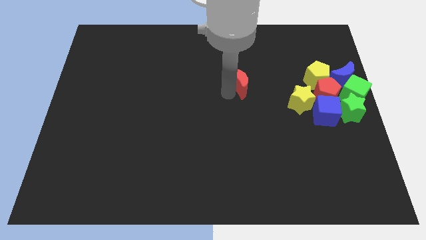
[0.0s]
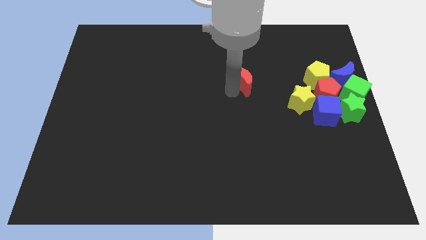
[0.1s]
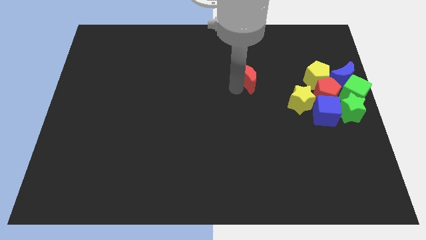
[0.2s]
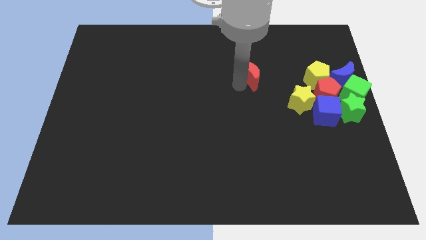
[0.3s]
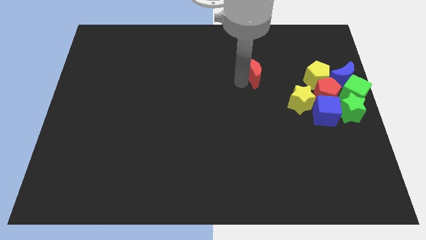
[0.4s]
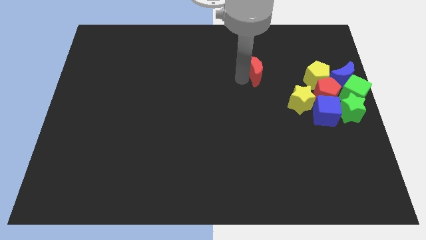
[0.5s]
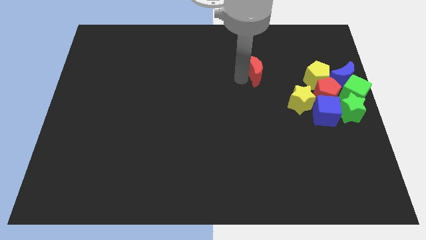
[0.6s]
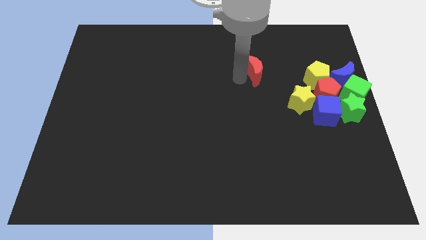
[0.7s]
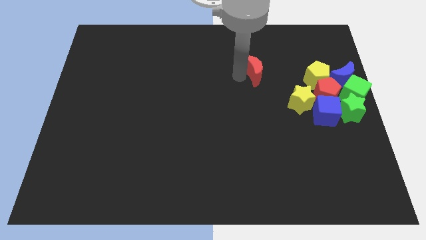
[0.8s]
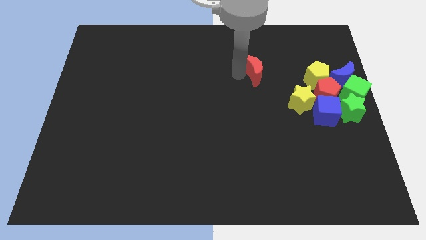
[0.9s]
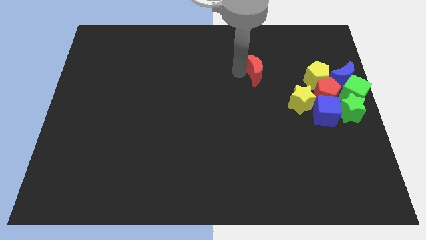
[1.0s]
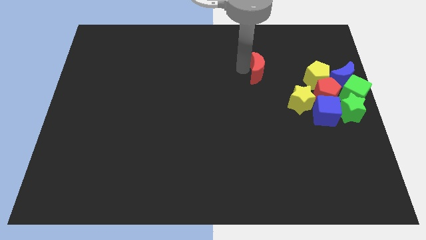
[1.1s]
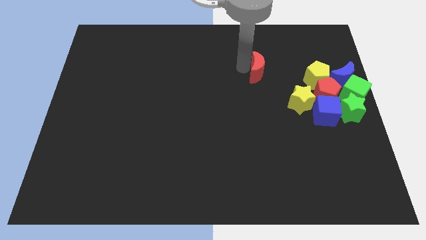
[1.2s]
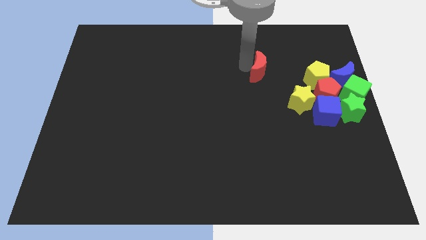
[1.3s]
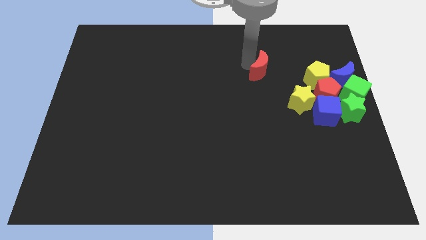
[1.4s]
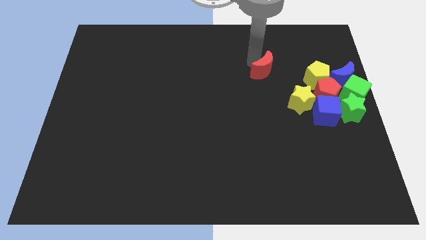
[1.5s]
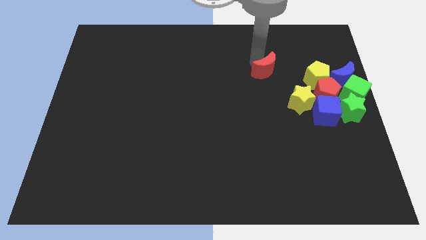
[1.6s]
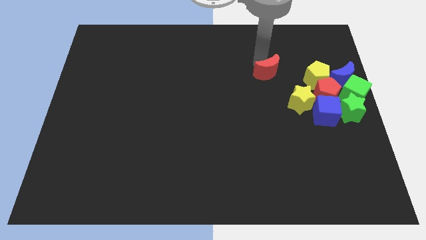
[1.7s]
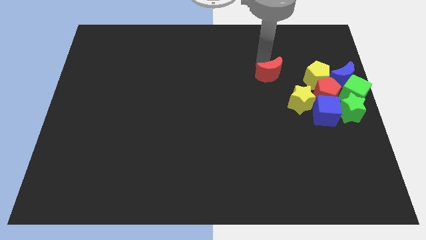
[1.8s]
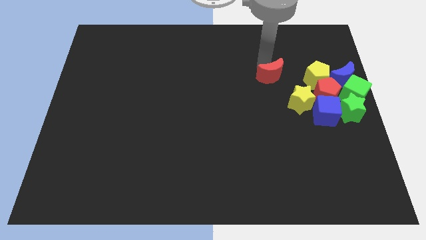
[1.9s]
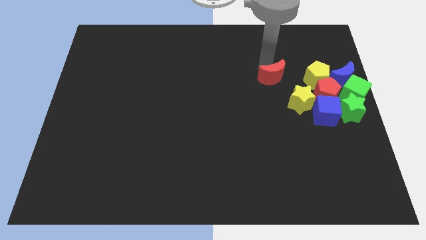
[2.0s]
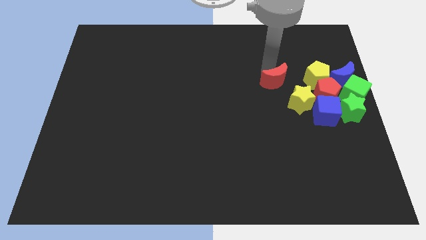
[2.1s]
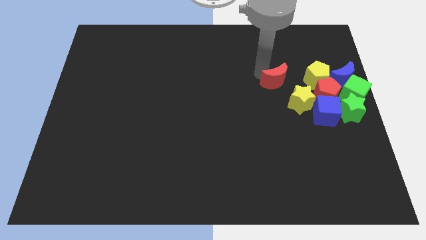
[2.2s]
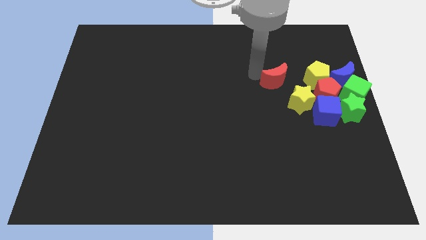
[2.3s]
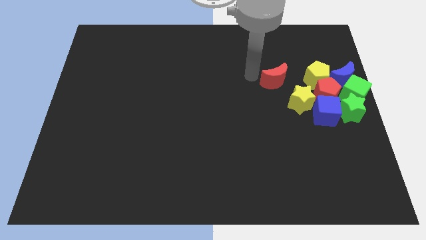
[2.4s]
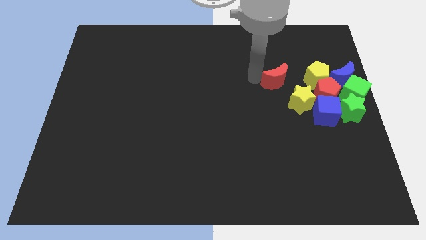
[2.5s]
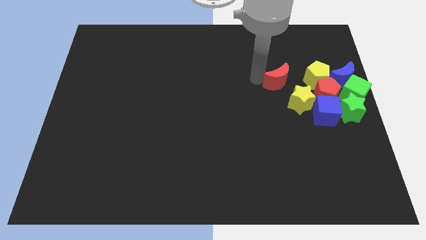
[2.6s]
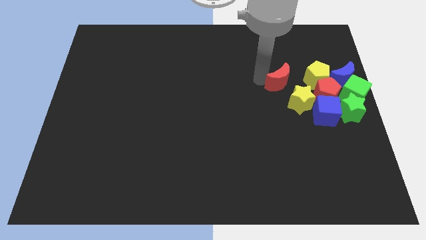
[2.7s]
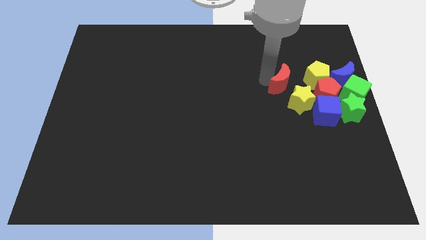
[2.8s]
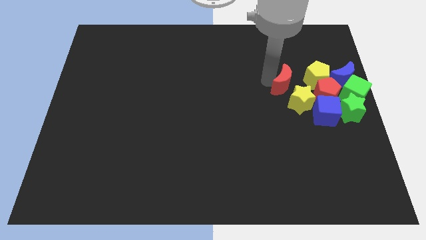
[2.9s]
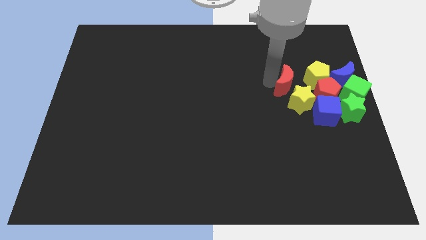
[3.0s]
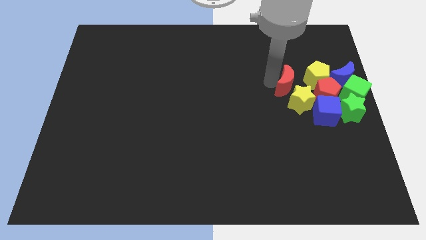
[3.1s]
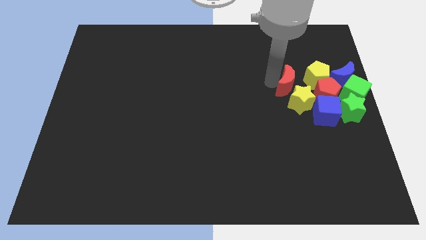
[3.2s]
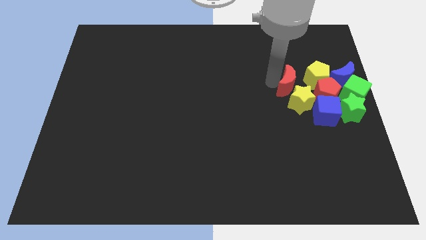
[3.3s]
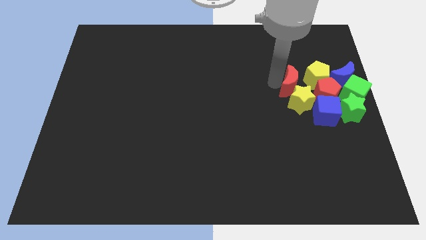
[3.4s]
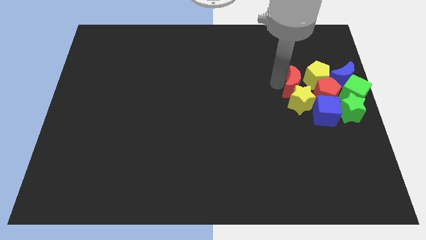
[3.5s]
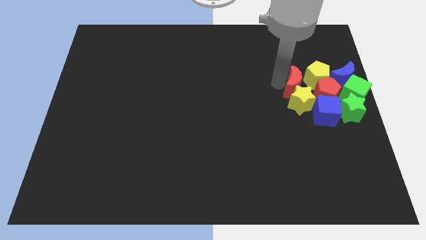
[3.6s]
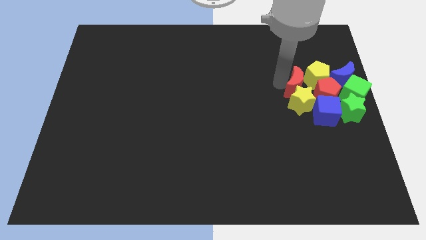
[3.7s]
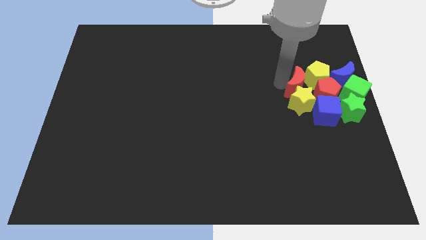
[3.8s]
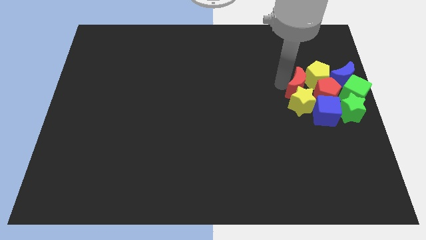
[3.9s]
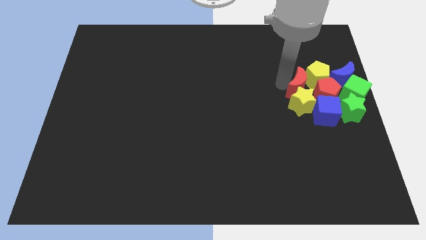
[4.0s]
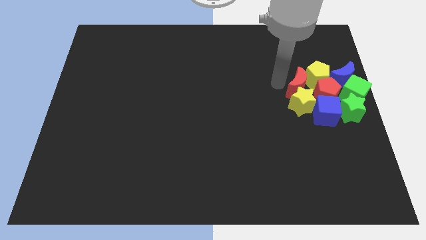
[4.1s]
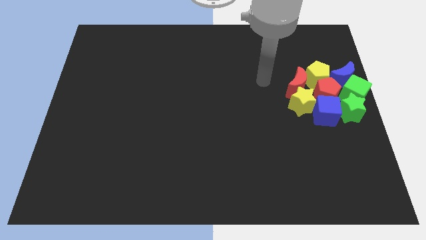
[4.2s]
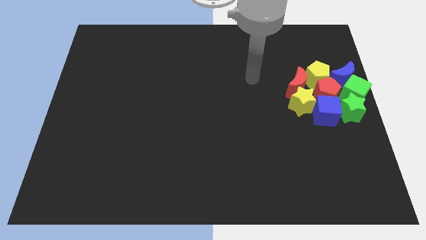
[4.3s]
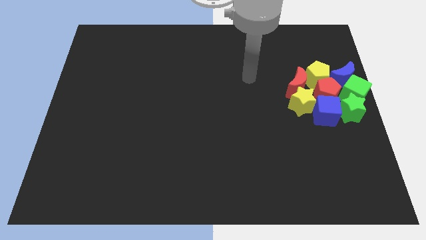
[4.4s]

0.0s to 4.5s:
move the blocks to the center right of the board

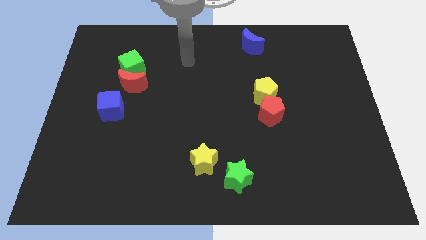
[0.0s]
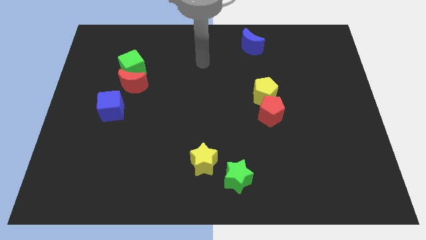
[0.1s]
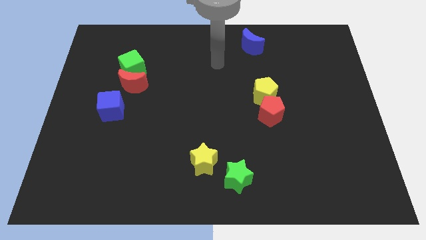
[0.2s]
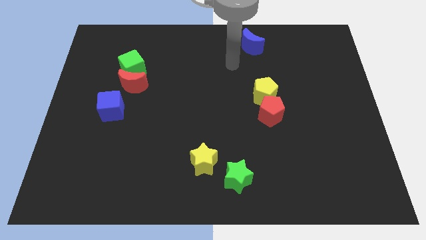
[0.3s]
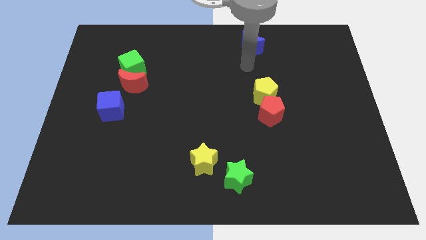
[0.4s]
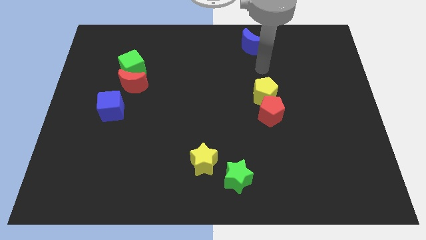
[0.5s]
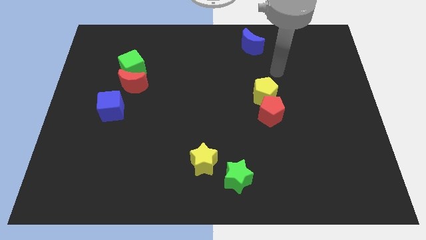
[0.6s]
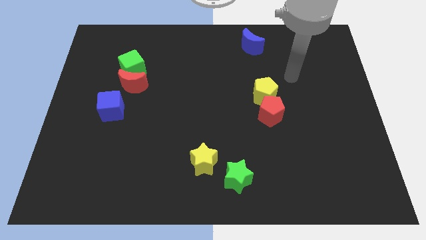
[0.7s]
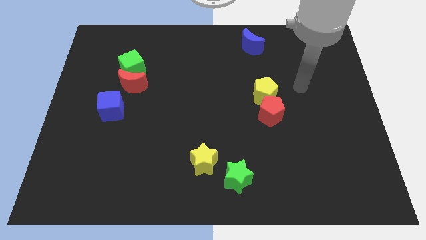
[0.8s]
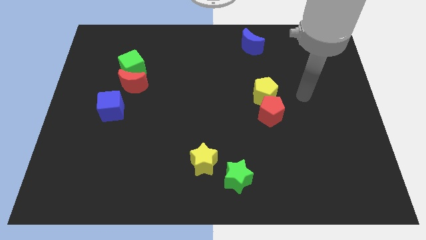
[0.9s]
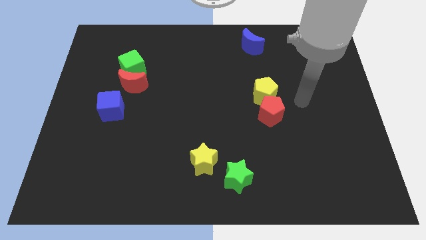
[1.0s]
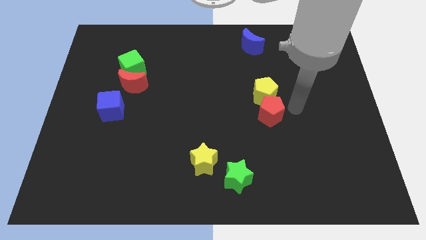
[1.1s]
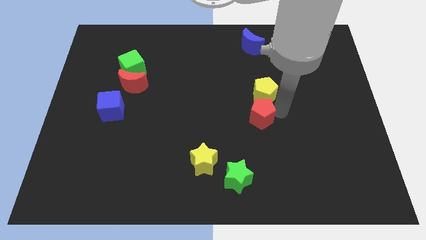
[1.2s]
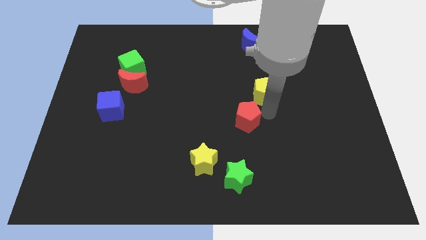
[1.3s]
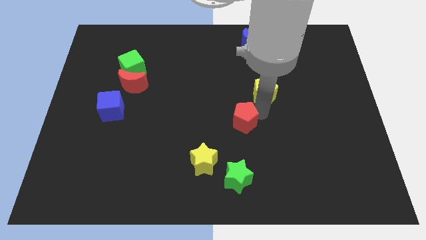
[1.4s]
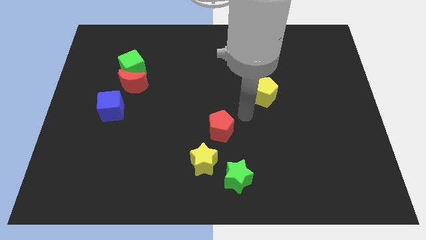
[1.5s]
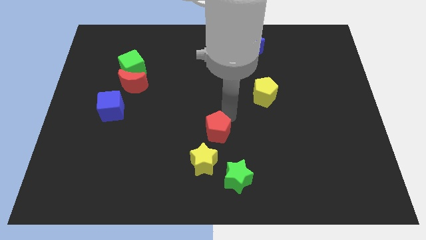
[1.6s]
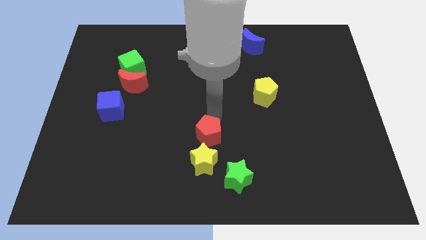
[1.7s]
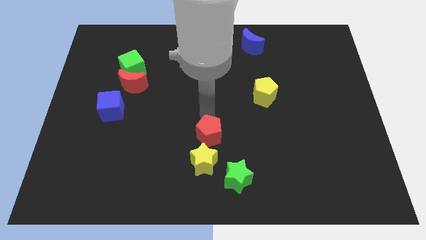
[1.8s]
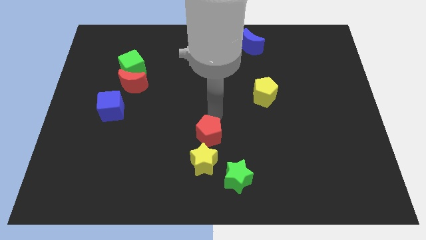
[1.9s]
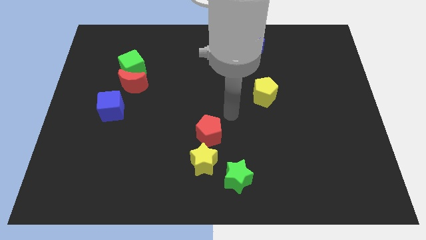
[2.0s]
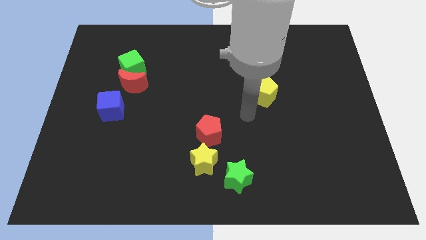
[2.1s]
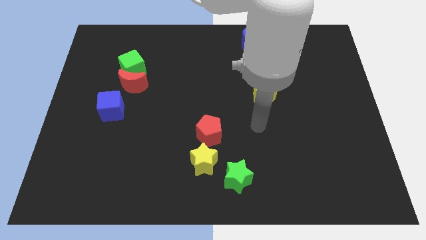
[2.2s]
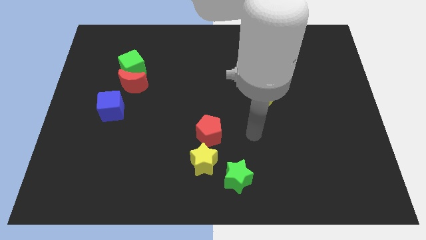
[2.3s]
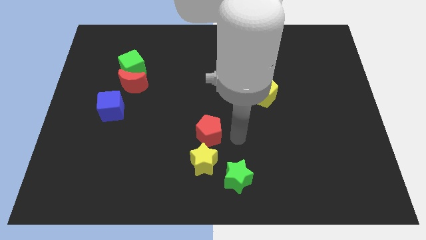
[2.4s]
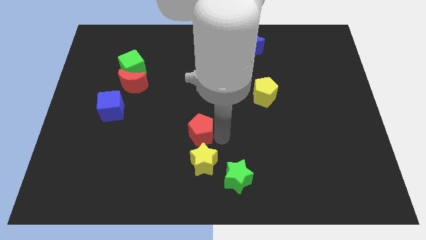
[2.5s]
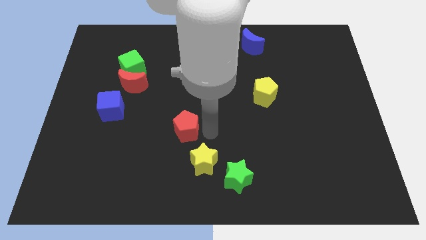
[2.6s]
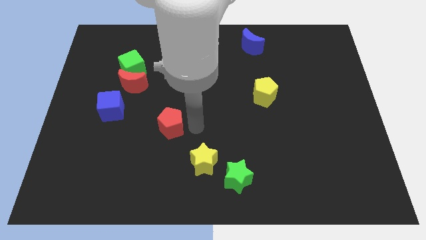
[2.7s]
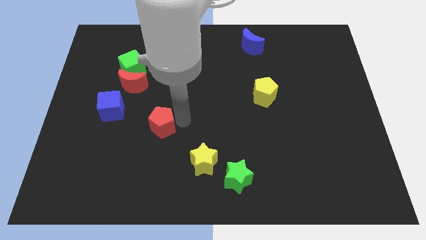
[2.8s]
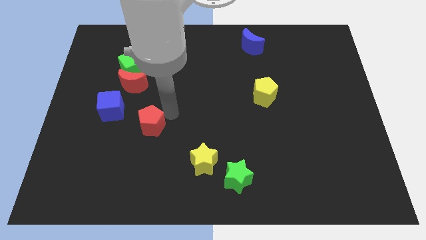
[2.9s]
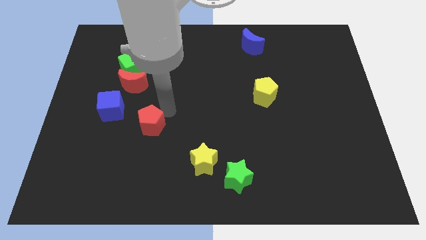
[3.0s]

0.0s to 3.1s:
separate the red pentagon from the yellow pentagon

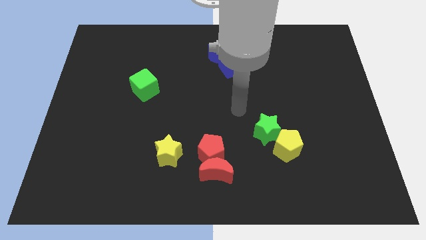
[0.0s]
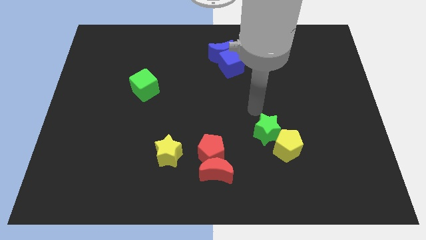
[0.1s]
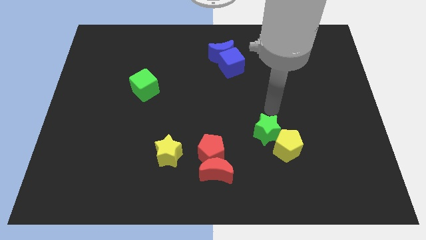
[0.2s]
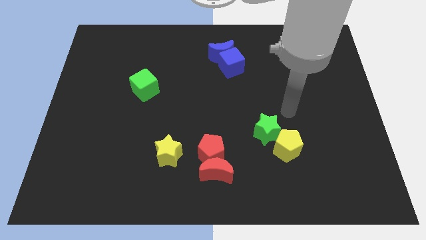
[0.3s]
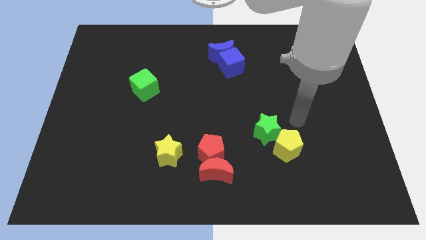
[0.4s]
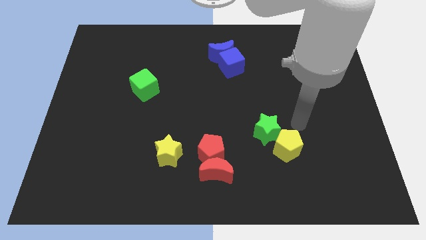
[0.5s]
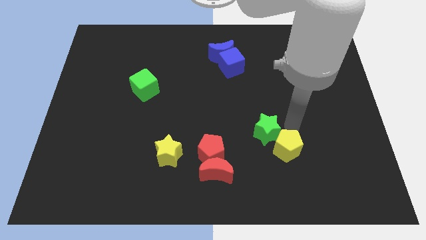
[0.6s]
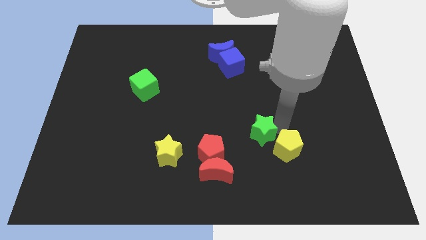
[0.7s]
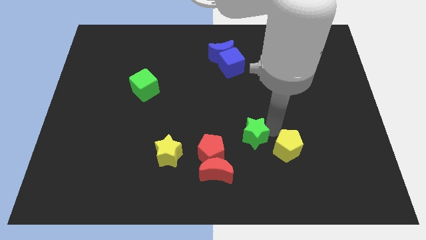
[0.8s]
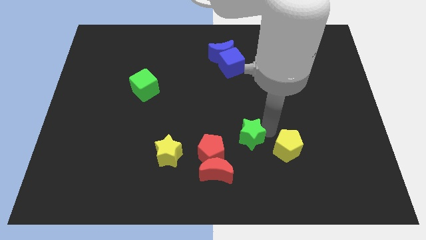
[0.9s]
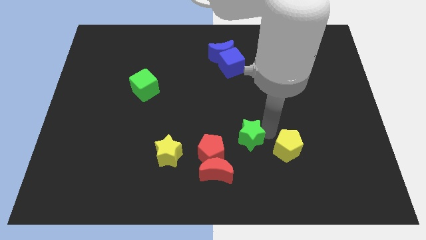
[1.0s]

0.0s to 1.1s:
separate the green star from the yellow pentagon

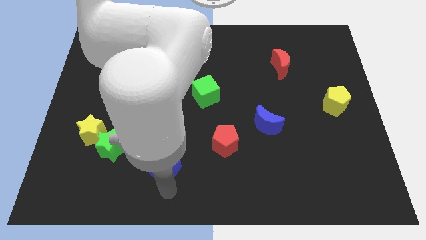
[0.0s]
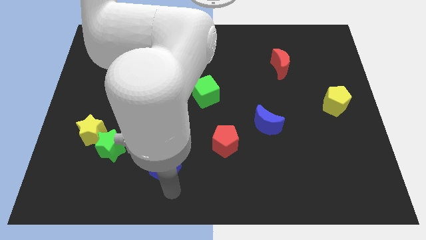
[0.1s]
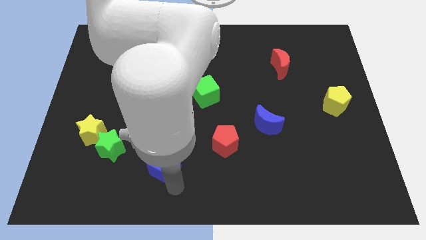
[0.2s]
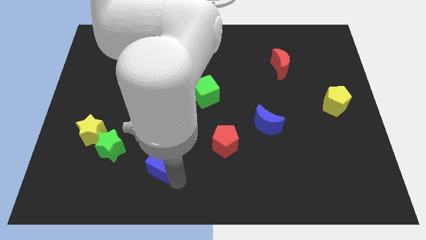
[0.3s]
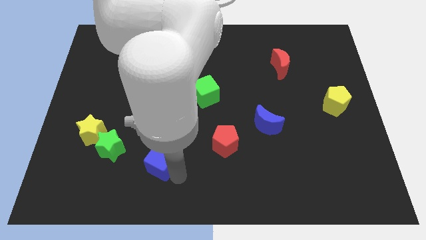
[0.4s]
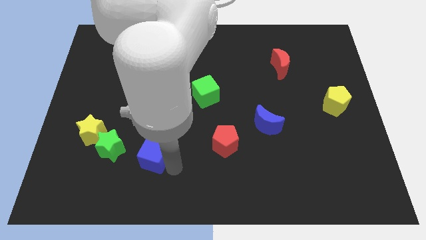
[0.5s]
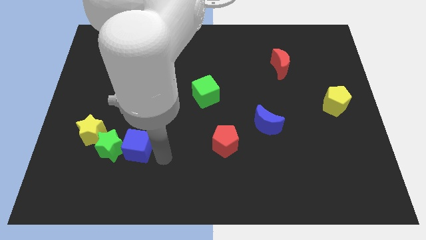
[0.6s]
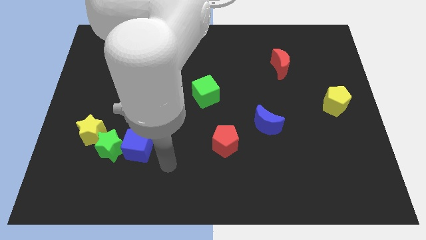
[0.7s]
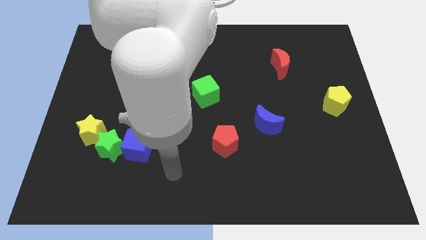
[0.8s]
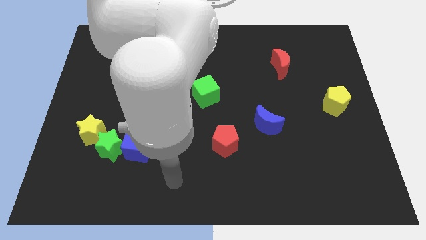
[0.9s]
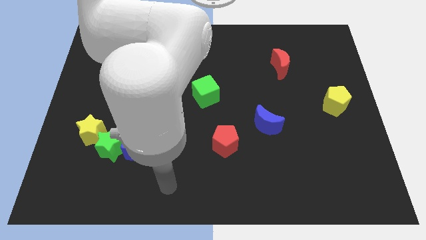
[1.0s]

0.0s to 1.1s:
push the blue cube to the right of the green star
